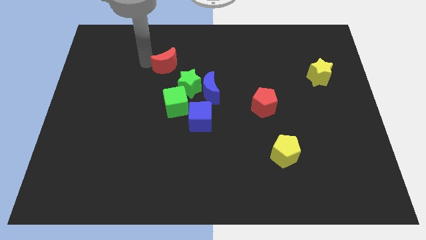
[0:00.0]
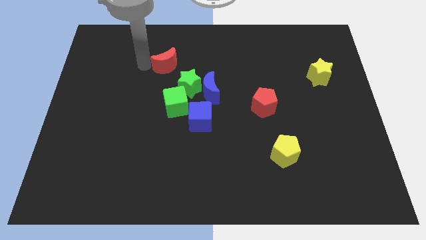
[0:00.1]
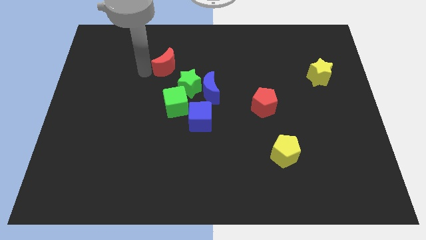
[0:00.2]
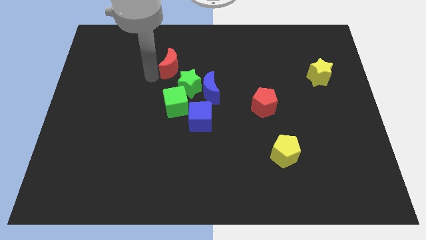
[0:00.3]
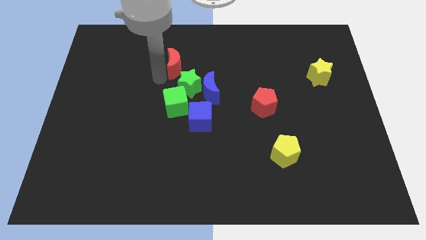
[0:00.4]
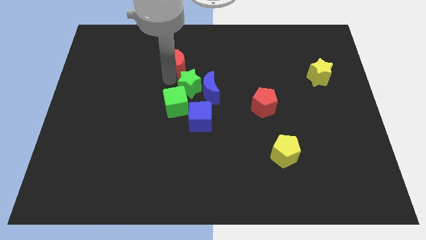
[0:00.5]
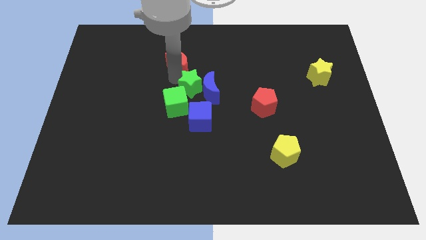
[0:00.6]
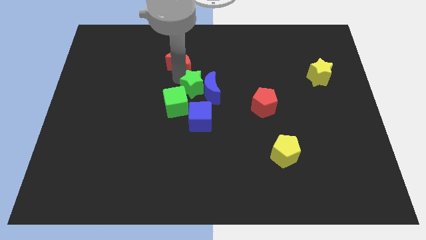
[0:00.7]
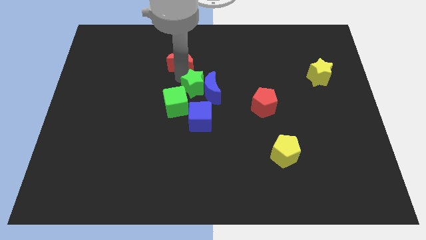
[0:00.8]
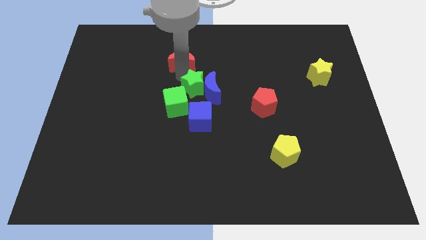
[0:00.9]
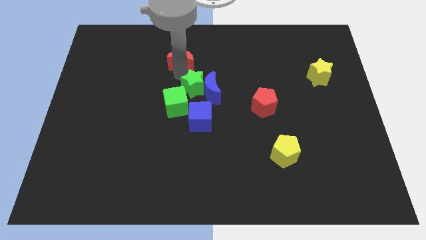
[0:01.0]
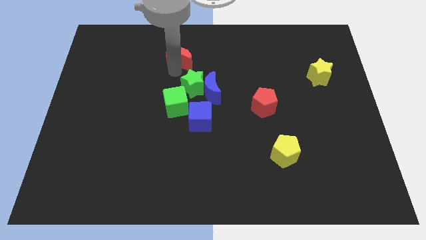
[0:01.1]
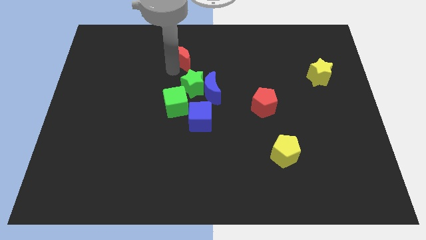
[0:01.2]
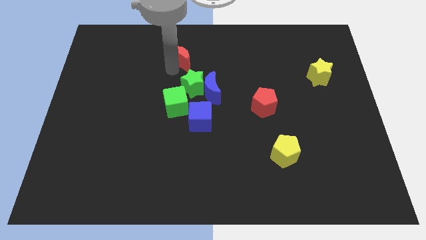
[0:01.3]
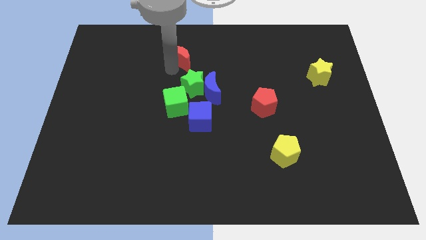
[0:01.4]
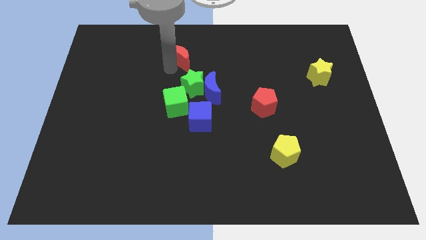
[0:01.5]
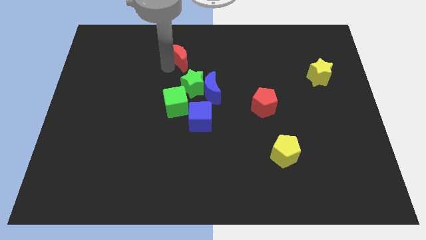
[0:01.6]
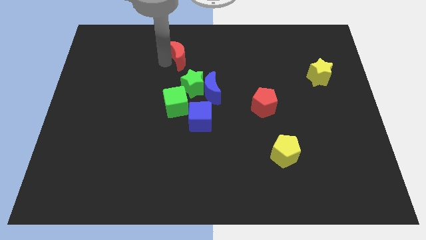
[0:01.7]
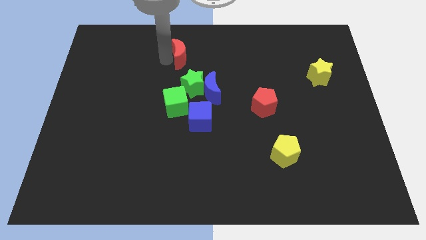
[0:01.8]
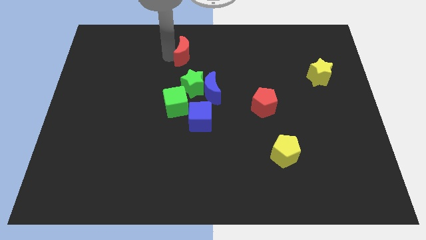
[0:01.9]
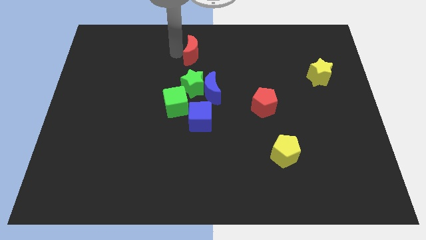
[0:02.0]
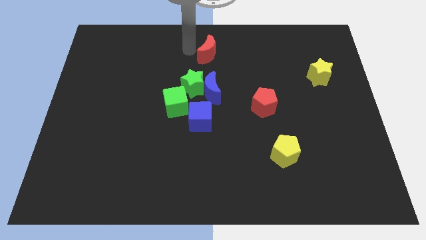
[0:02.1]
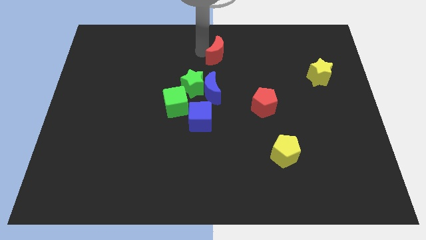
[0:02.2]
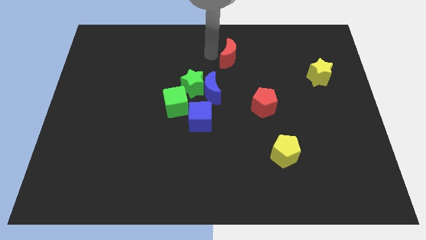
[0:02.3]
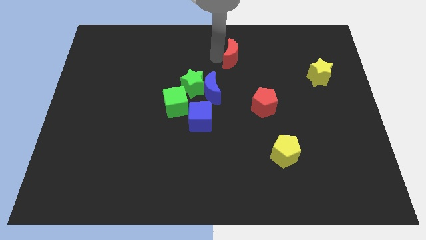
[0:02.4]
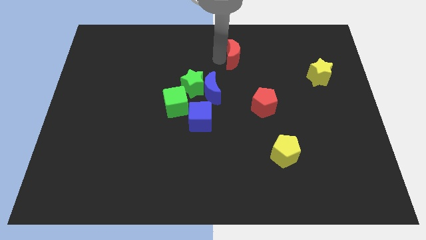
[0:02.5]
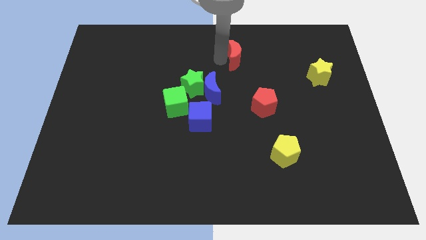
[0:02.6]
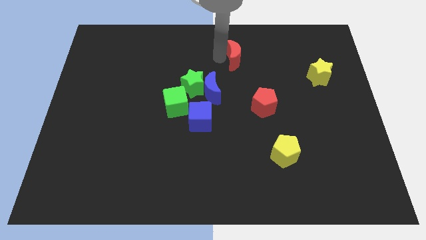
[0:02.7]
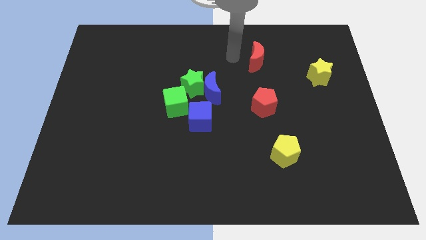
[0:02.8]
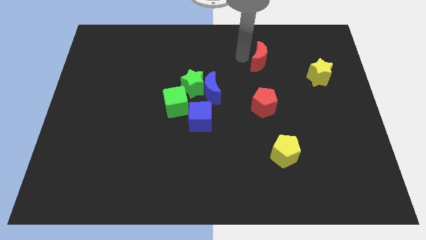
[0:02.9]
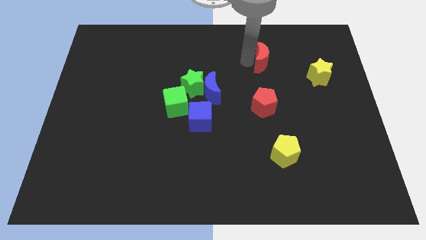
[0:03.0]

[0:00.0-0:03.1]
place the red crescent above the red pentagon

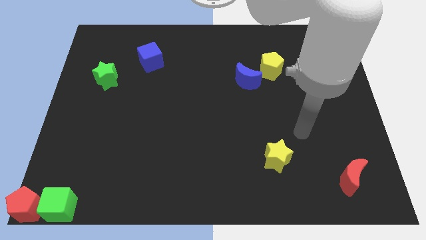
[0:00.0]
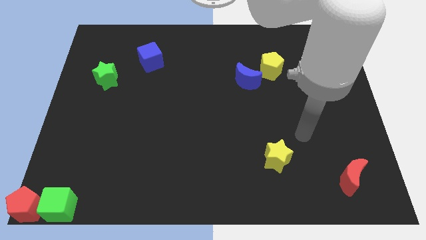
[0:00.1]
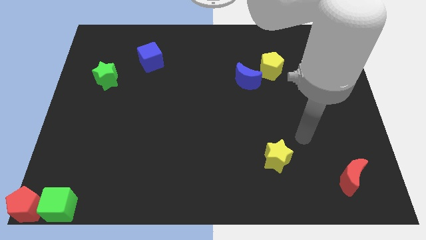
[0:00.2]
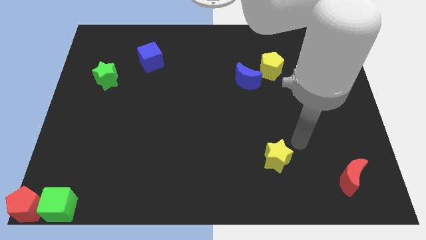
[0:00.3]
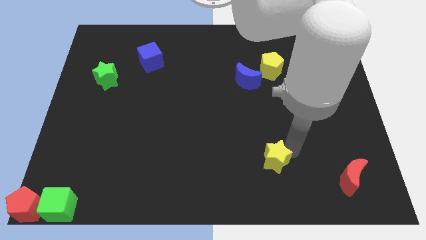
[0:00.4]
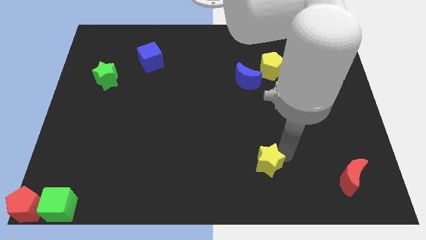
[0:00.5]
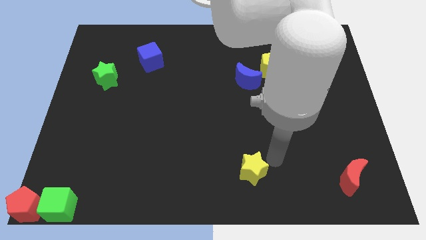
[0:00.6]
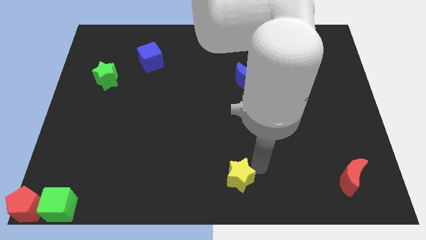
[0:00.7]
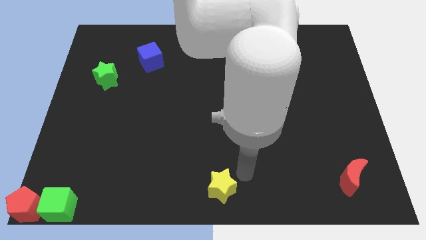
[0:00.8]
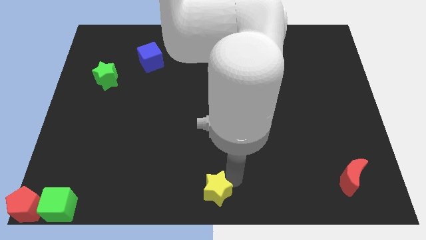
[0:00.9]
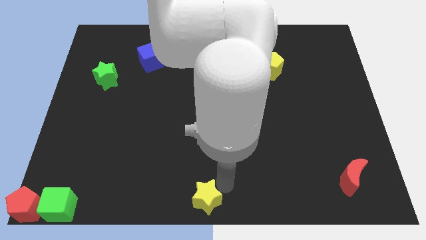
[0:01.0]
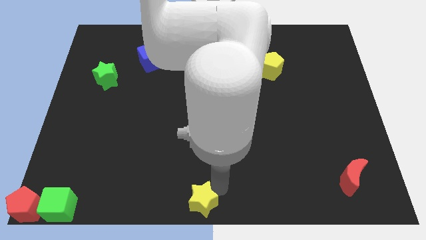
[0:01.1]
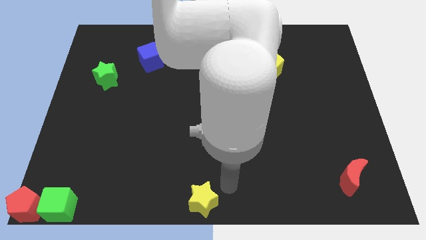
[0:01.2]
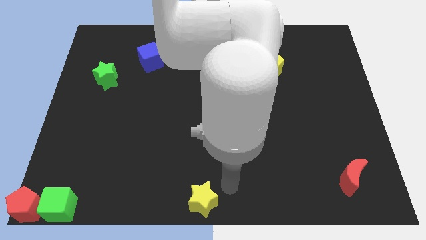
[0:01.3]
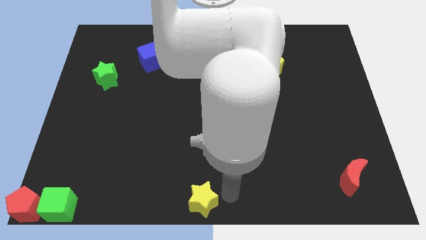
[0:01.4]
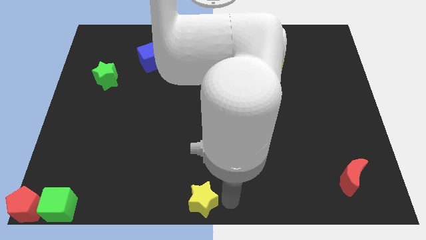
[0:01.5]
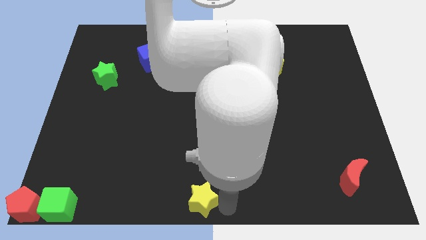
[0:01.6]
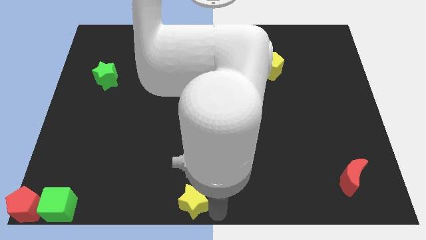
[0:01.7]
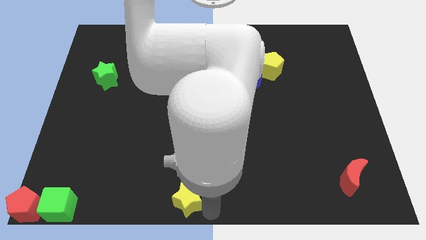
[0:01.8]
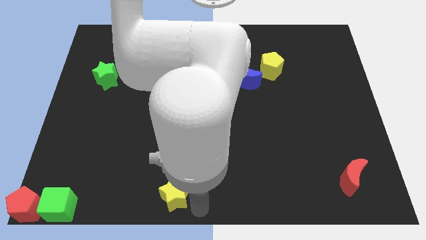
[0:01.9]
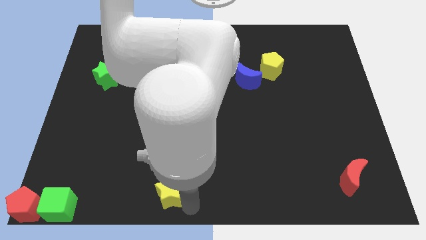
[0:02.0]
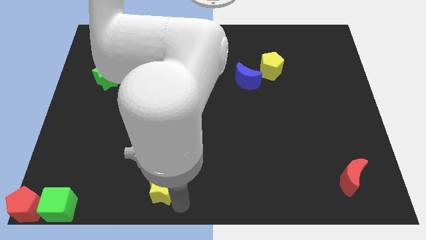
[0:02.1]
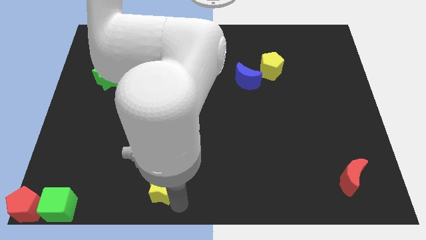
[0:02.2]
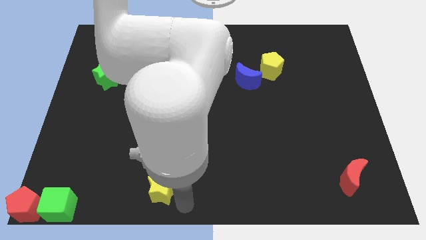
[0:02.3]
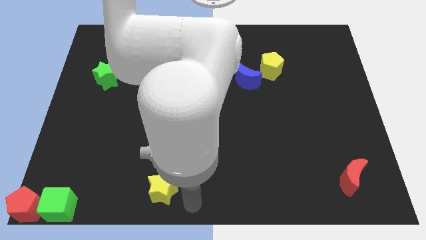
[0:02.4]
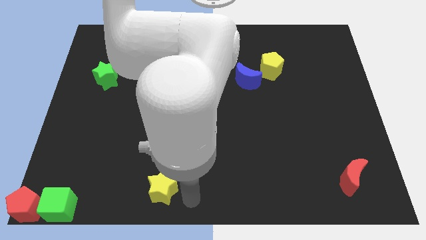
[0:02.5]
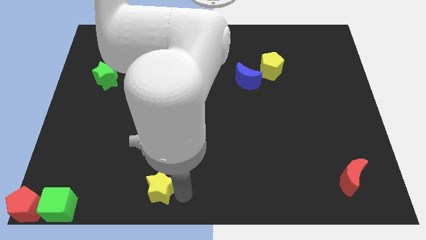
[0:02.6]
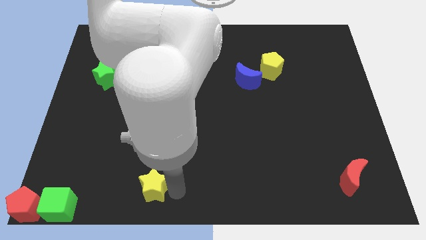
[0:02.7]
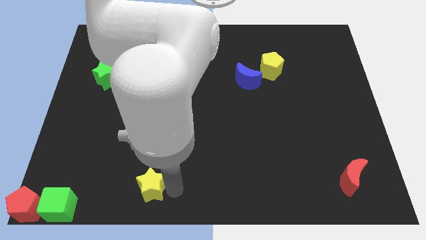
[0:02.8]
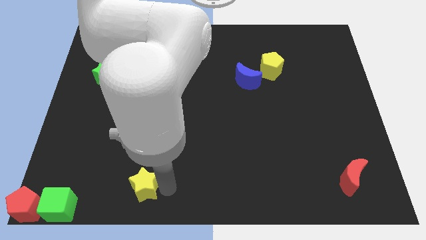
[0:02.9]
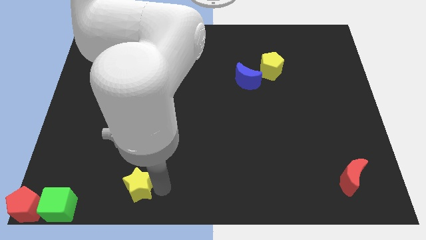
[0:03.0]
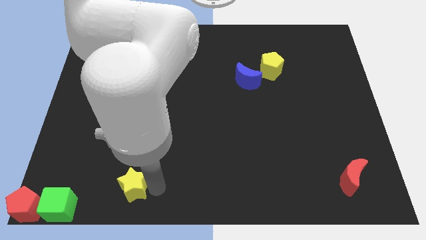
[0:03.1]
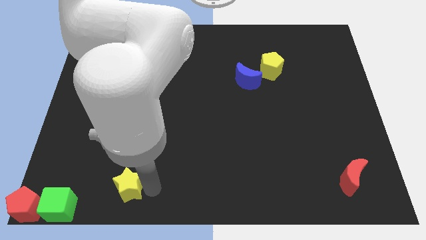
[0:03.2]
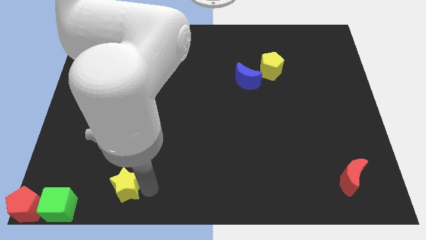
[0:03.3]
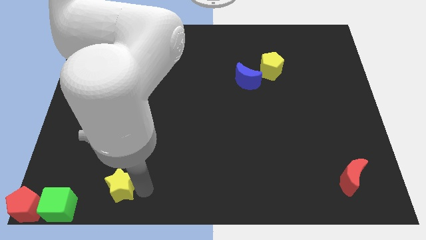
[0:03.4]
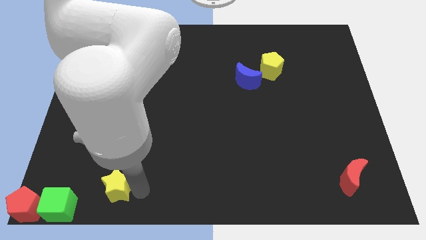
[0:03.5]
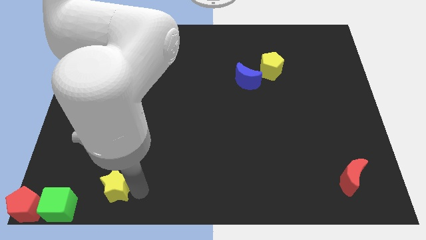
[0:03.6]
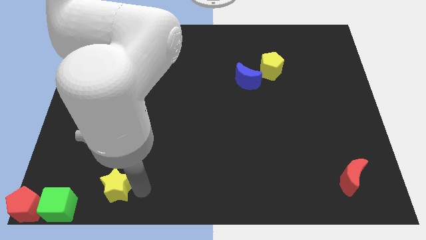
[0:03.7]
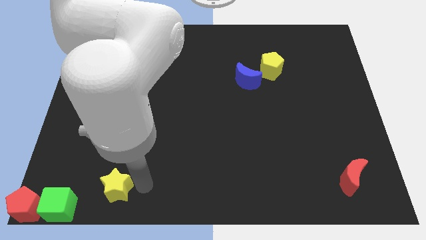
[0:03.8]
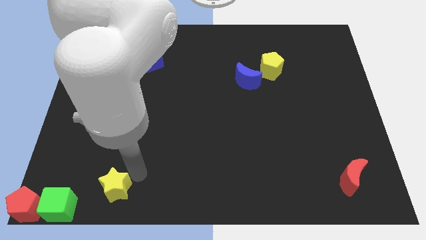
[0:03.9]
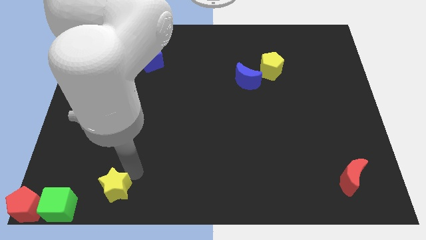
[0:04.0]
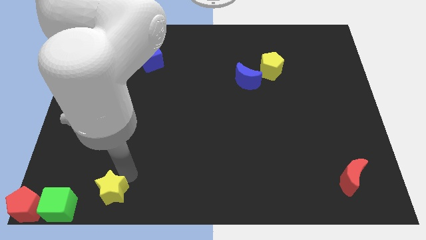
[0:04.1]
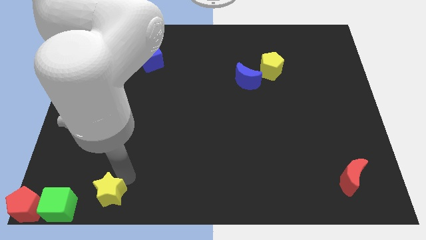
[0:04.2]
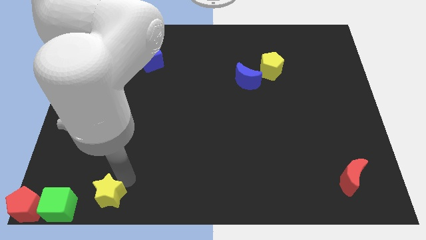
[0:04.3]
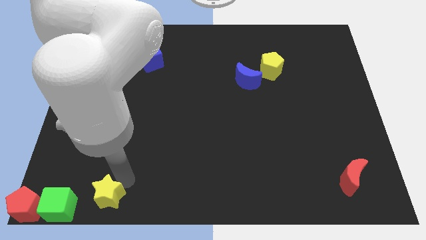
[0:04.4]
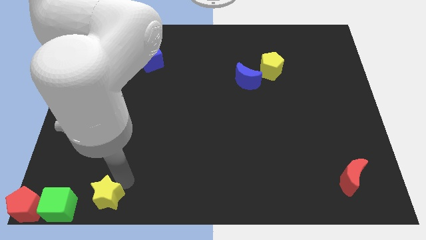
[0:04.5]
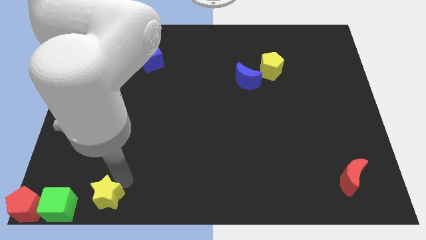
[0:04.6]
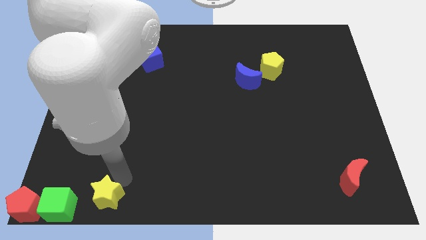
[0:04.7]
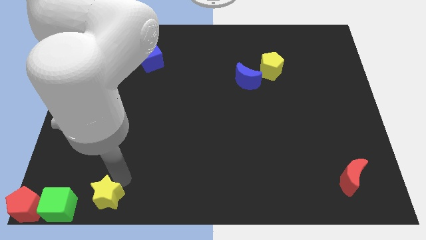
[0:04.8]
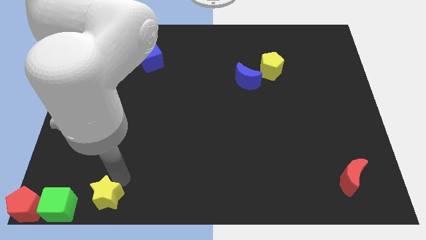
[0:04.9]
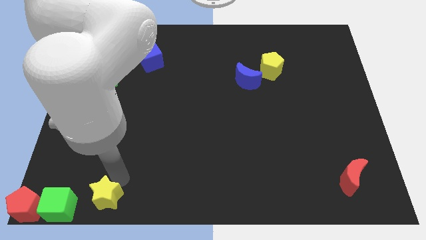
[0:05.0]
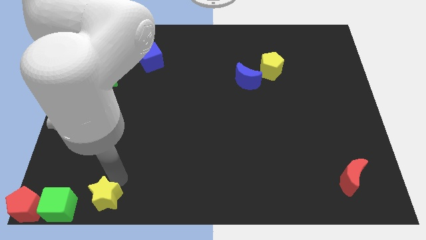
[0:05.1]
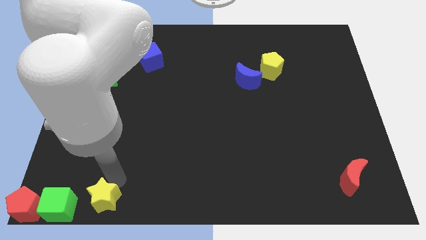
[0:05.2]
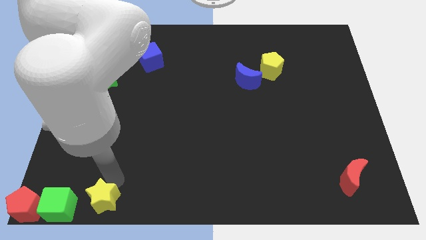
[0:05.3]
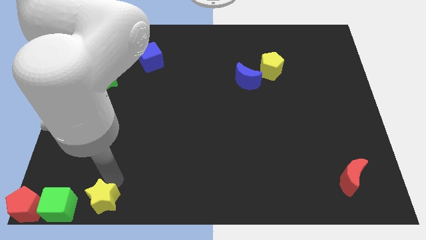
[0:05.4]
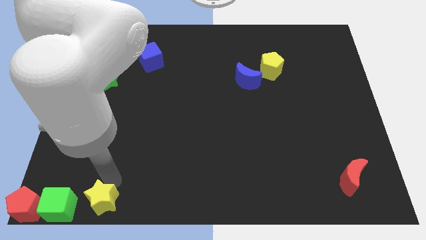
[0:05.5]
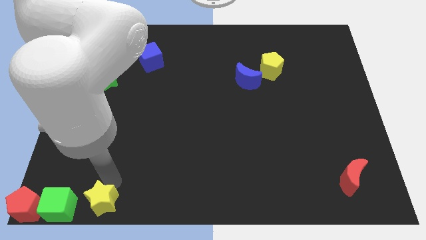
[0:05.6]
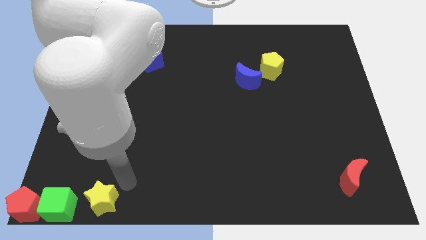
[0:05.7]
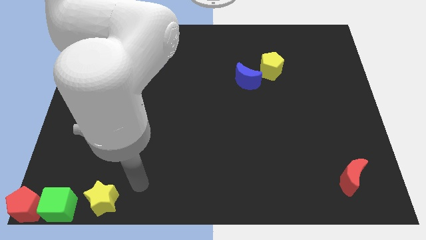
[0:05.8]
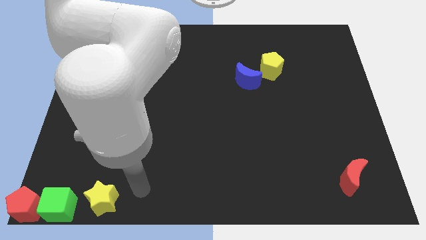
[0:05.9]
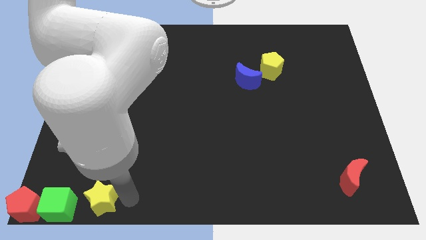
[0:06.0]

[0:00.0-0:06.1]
place the yellow star right to the green cube
